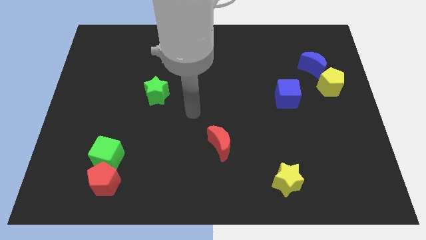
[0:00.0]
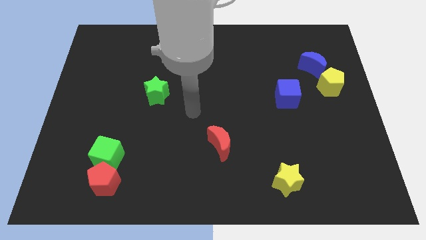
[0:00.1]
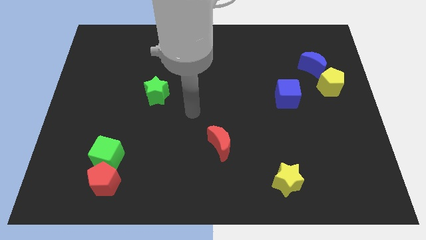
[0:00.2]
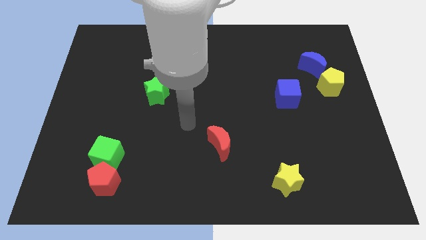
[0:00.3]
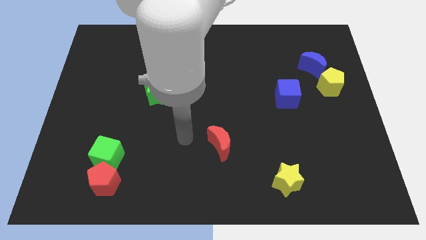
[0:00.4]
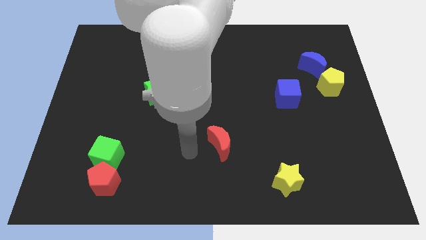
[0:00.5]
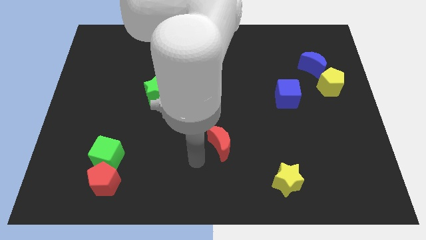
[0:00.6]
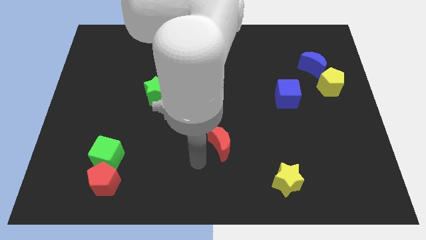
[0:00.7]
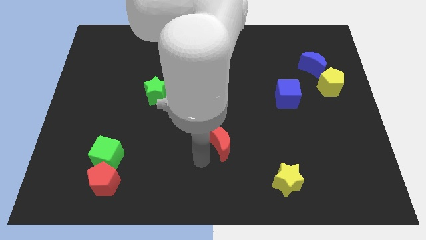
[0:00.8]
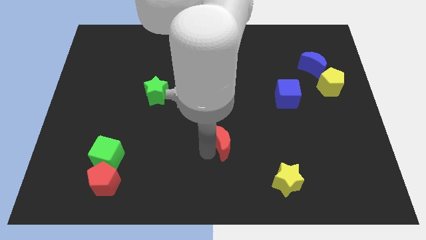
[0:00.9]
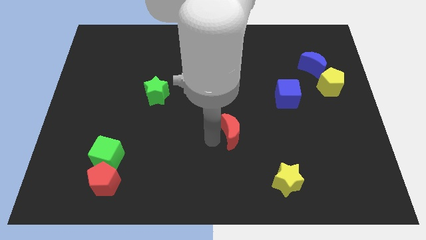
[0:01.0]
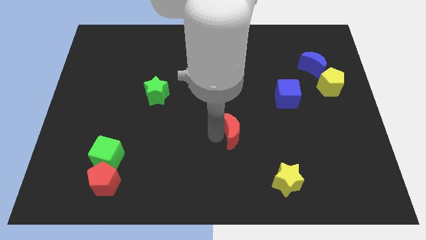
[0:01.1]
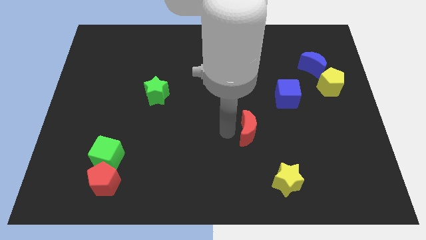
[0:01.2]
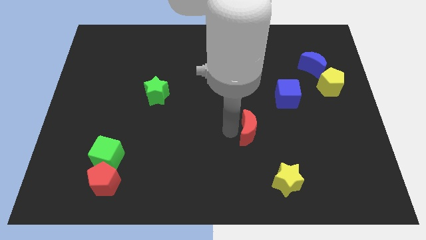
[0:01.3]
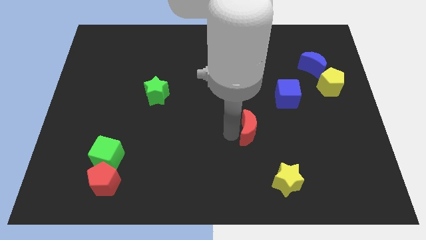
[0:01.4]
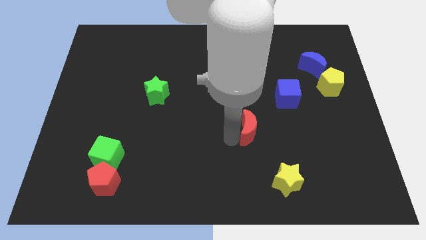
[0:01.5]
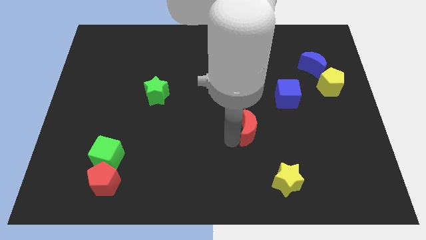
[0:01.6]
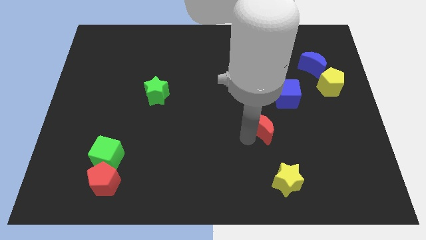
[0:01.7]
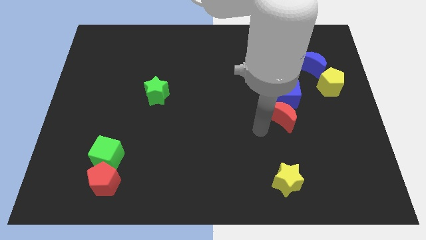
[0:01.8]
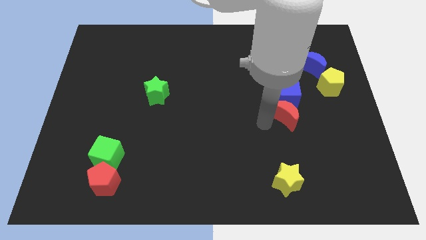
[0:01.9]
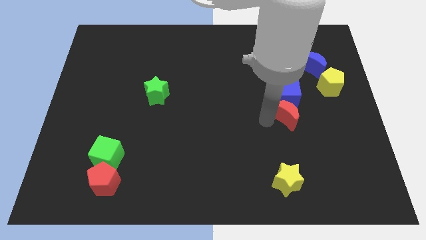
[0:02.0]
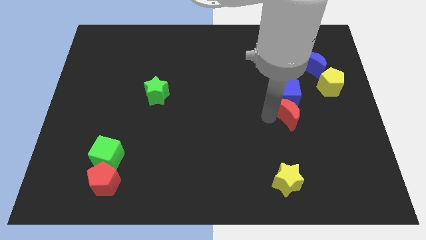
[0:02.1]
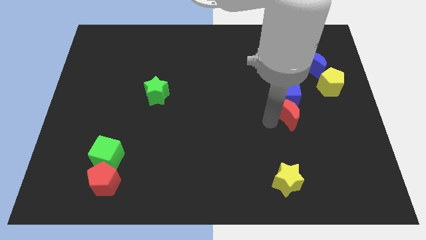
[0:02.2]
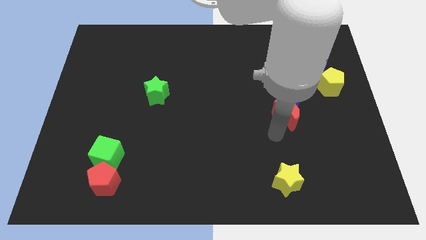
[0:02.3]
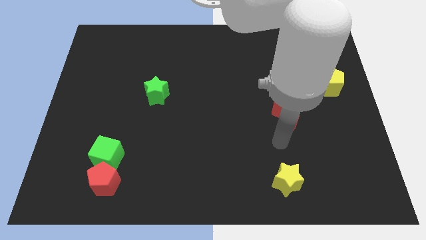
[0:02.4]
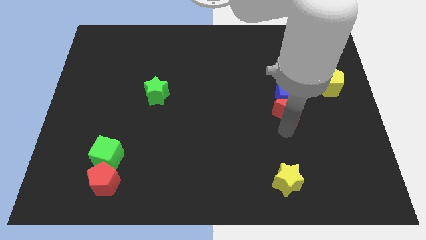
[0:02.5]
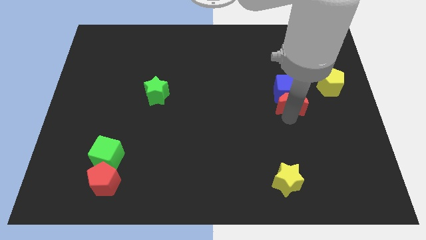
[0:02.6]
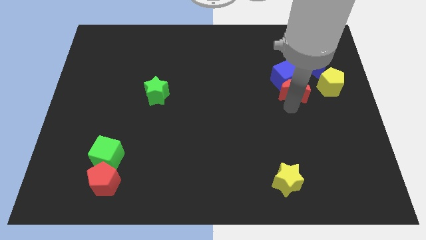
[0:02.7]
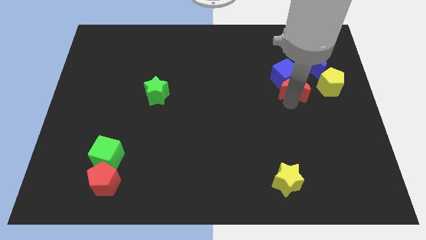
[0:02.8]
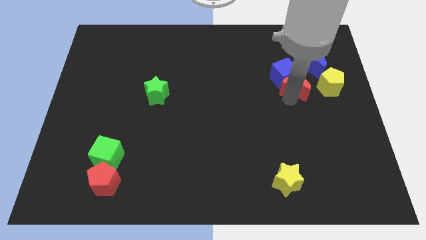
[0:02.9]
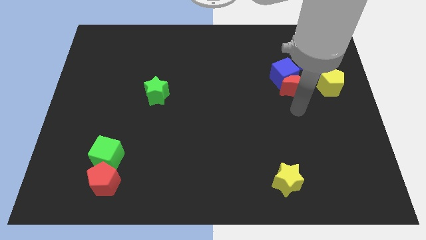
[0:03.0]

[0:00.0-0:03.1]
push the red crescent into the bottom of the blue cube

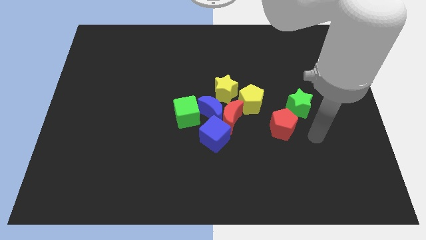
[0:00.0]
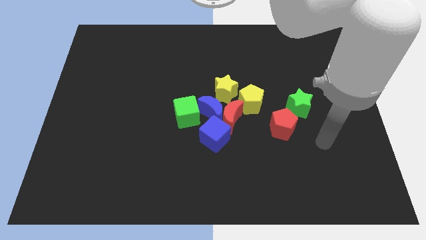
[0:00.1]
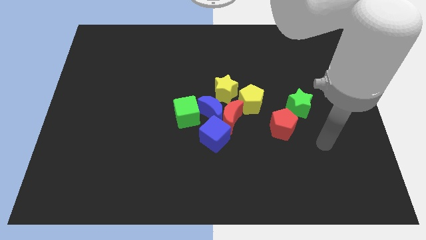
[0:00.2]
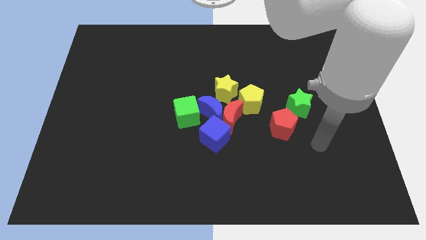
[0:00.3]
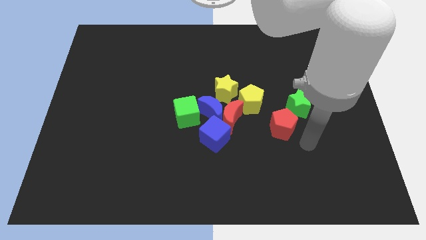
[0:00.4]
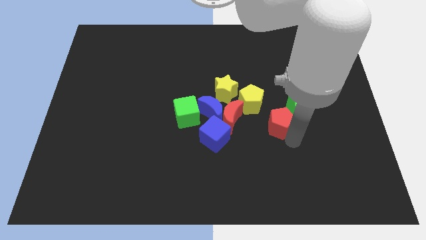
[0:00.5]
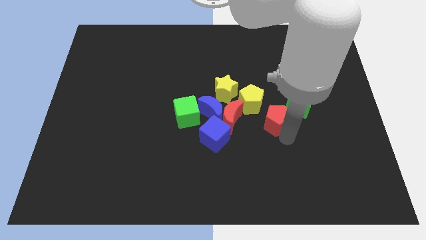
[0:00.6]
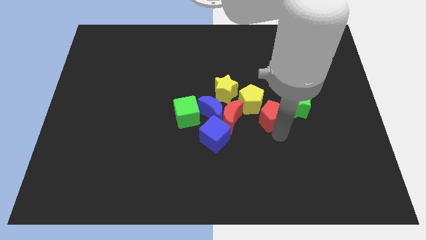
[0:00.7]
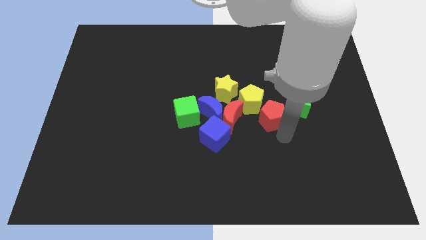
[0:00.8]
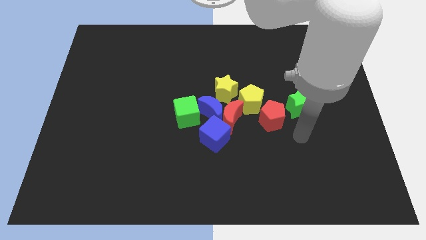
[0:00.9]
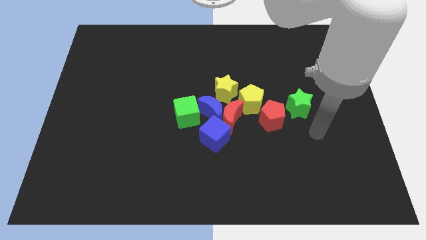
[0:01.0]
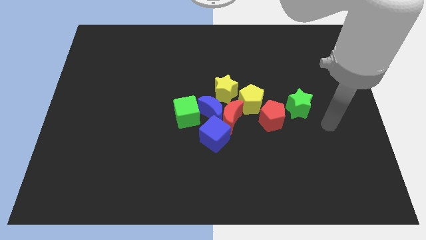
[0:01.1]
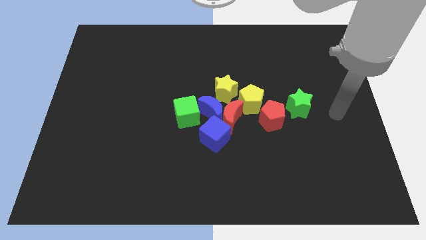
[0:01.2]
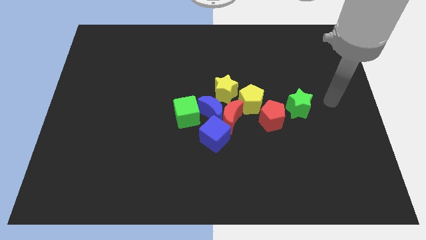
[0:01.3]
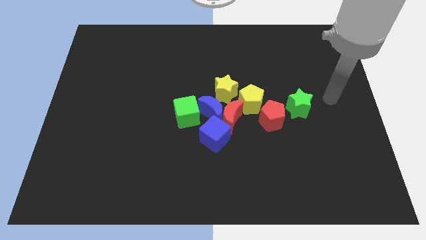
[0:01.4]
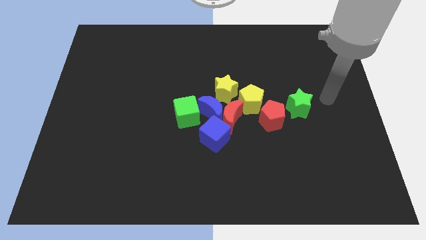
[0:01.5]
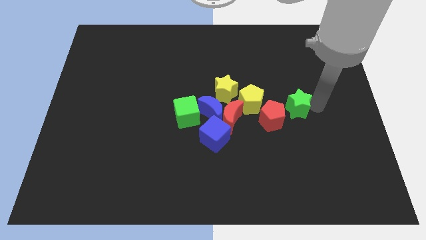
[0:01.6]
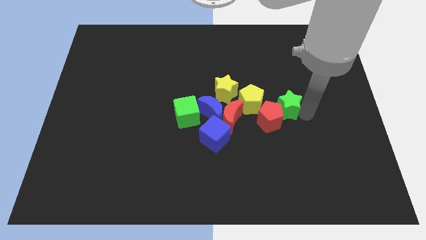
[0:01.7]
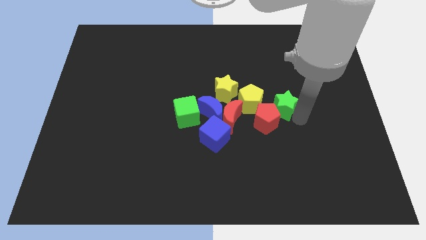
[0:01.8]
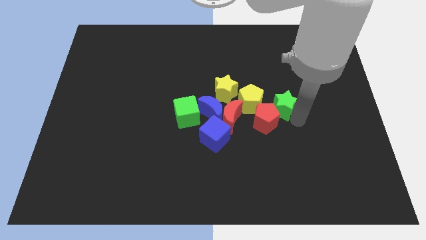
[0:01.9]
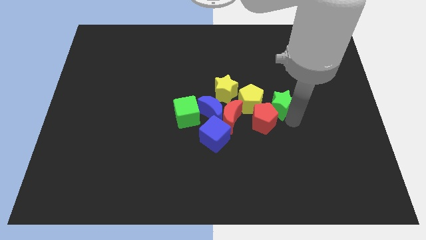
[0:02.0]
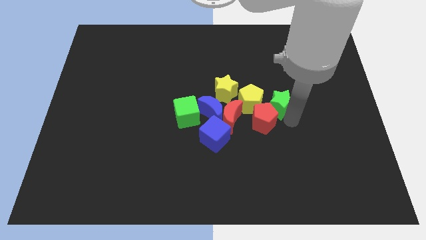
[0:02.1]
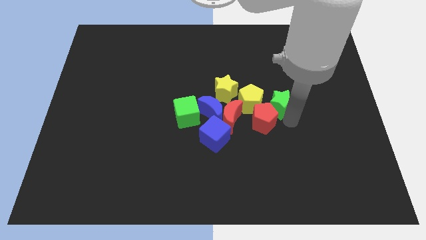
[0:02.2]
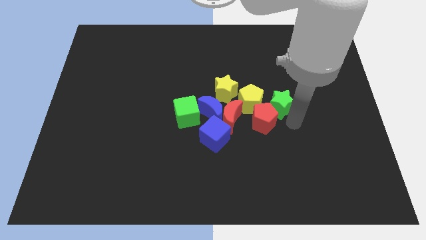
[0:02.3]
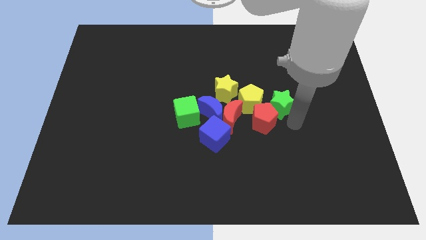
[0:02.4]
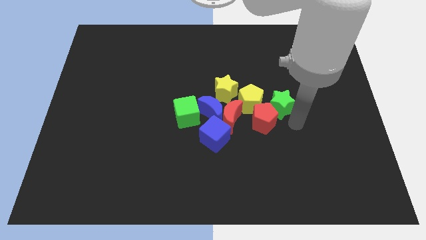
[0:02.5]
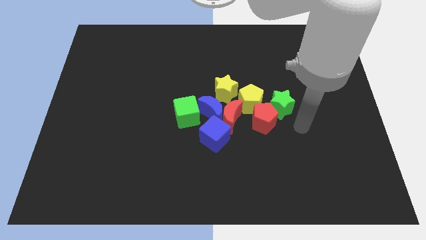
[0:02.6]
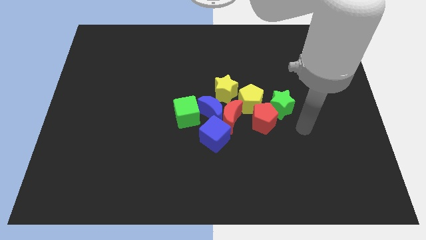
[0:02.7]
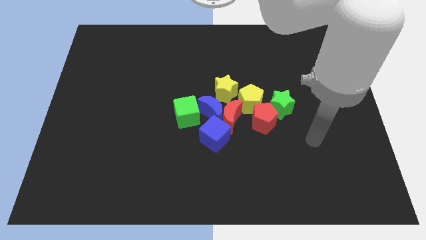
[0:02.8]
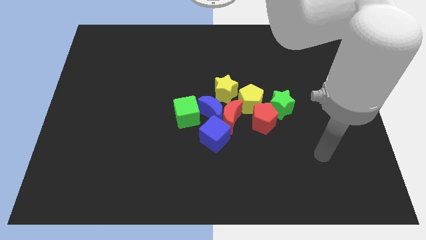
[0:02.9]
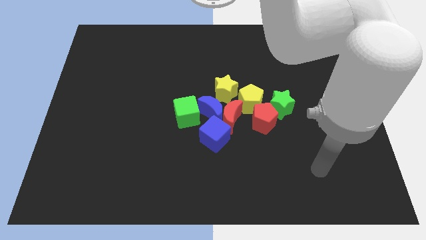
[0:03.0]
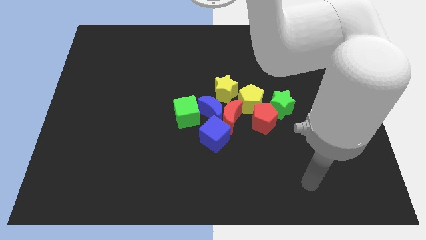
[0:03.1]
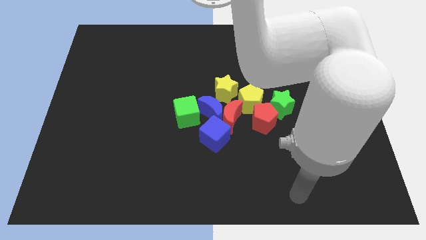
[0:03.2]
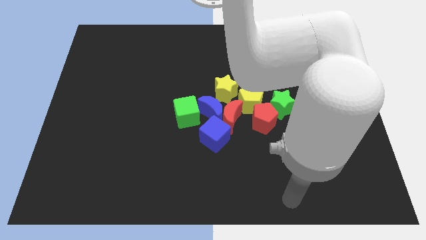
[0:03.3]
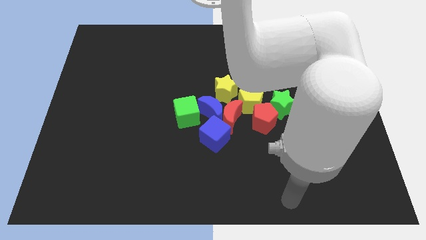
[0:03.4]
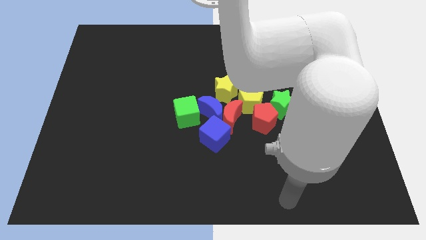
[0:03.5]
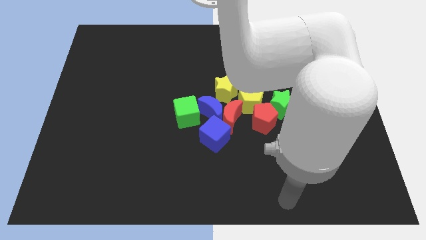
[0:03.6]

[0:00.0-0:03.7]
push the green star and the red pentagon to the group of blocks

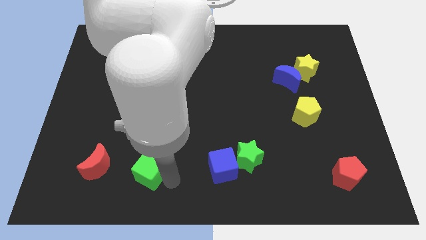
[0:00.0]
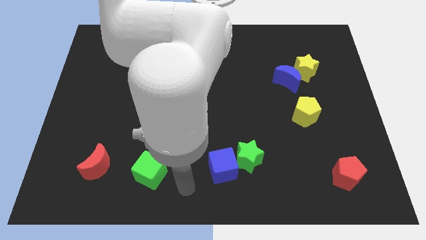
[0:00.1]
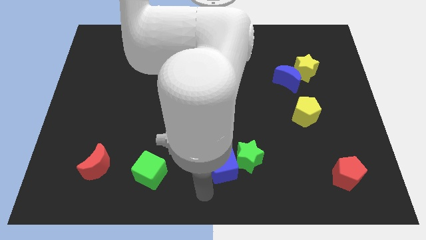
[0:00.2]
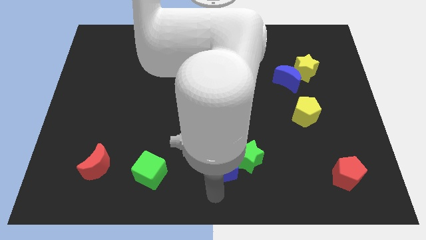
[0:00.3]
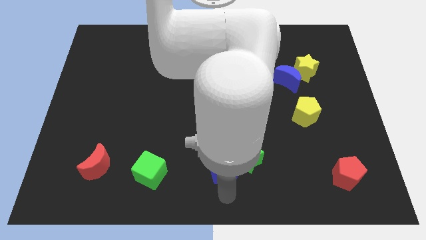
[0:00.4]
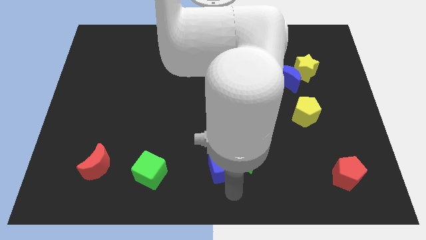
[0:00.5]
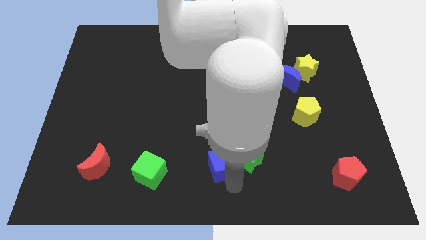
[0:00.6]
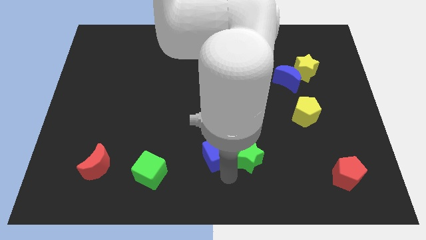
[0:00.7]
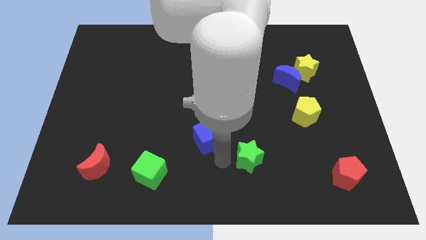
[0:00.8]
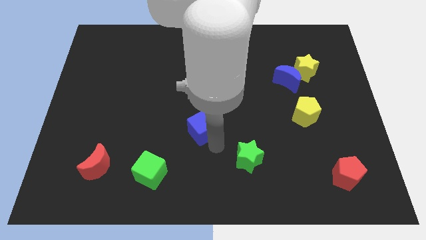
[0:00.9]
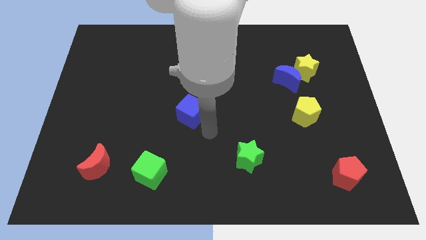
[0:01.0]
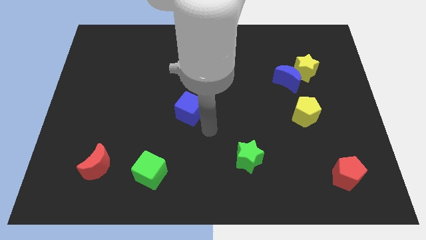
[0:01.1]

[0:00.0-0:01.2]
move the blue cube near to the center of the board

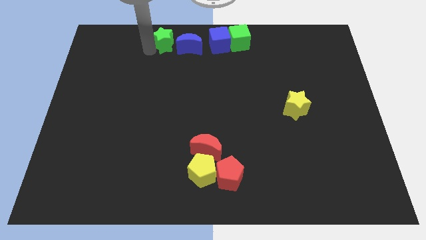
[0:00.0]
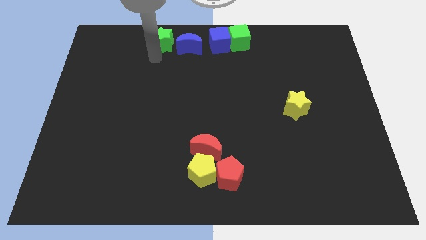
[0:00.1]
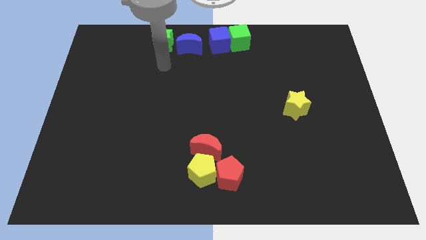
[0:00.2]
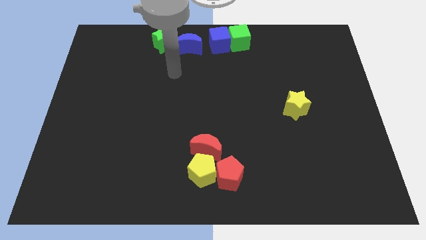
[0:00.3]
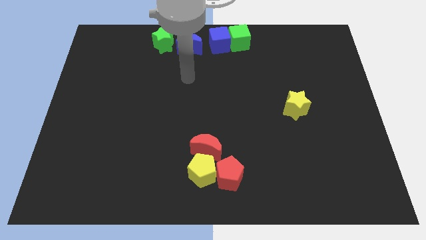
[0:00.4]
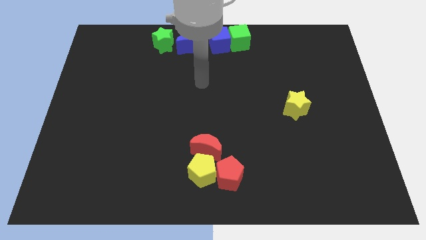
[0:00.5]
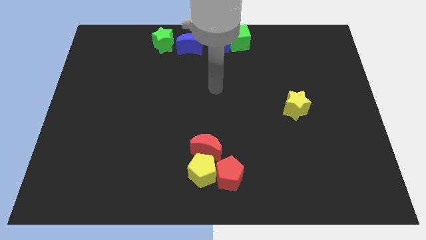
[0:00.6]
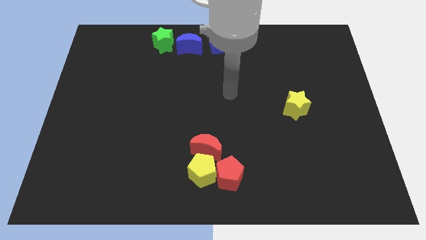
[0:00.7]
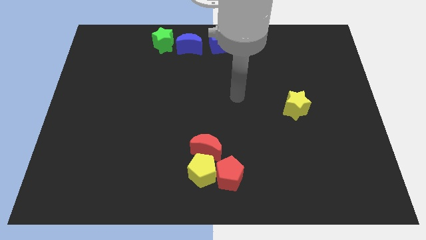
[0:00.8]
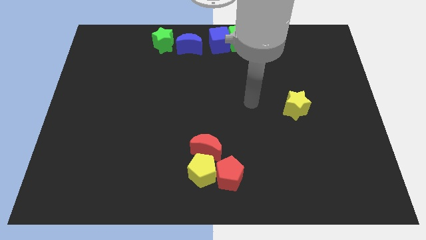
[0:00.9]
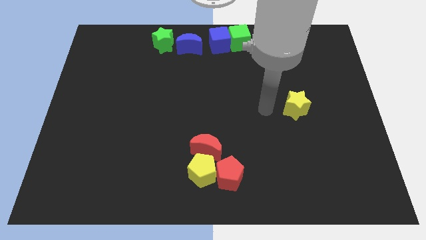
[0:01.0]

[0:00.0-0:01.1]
move away from the green star
